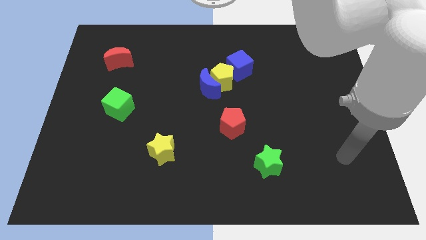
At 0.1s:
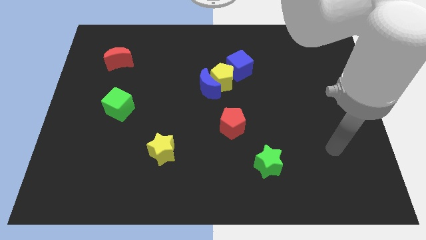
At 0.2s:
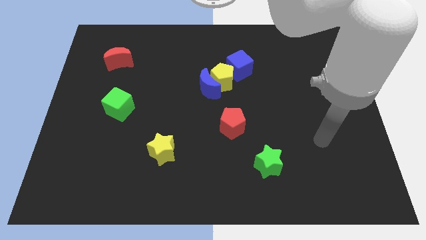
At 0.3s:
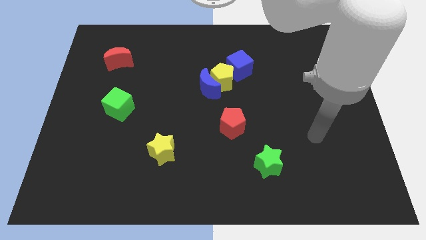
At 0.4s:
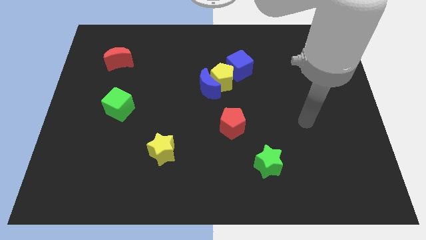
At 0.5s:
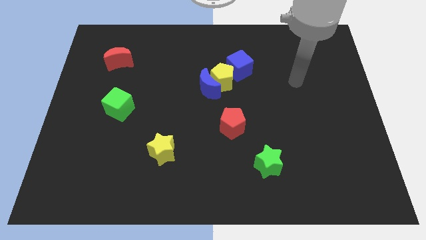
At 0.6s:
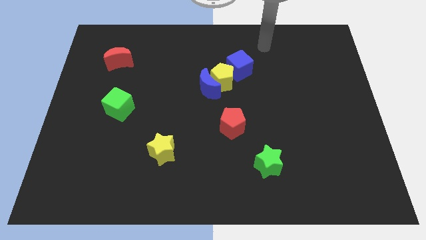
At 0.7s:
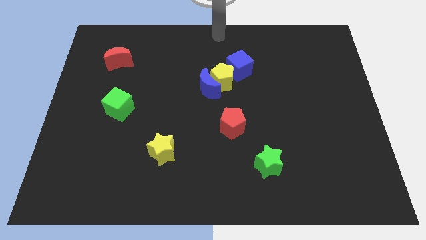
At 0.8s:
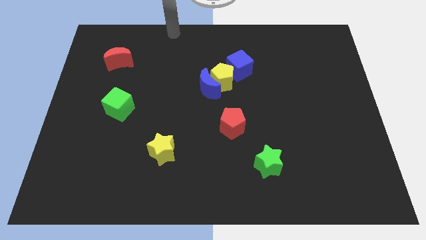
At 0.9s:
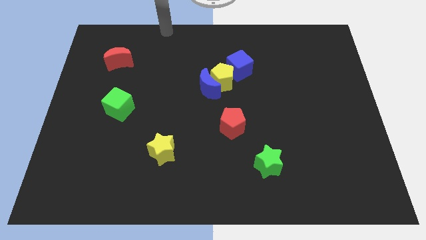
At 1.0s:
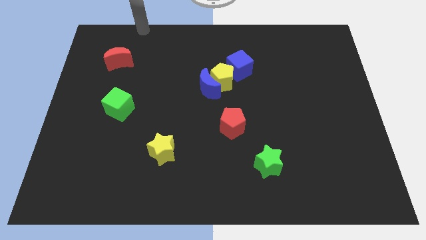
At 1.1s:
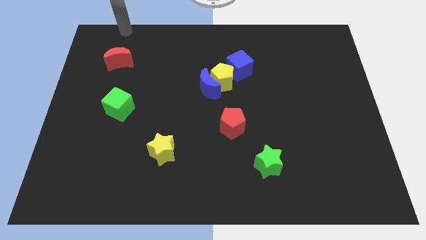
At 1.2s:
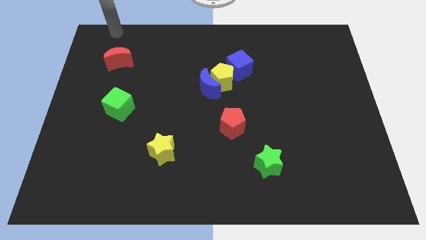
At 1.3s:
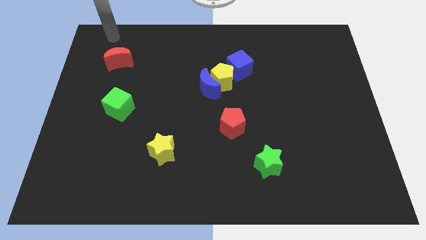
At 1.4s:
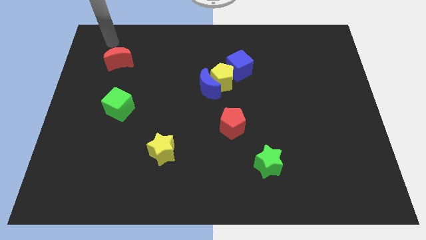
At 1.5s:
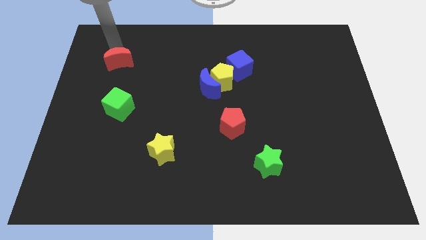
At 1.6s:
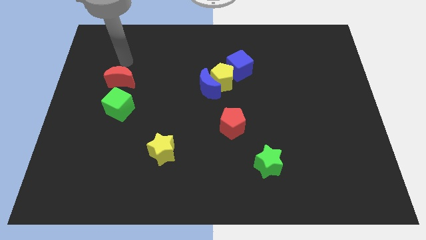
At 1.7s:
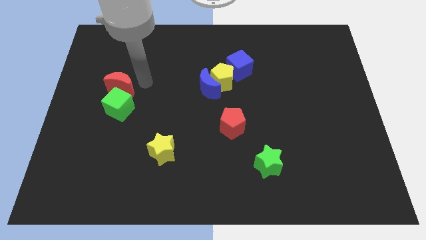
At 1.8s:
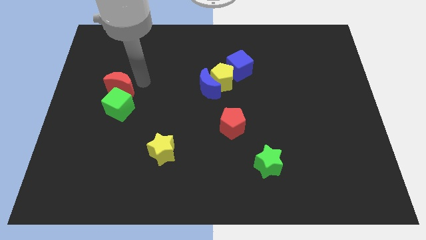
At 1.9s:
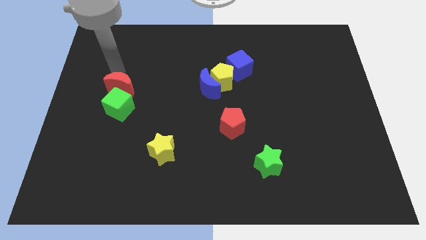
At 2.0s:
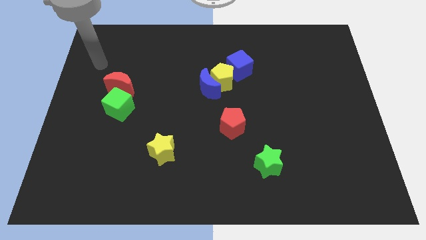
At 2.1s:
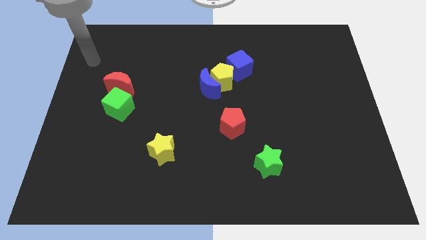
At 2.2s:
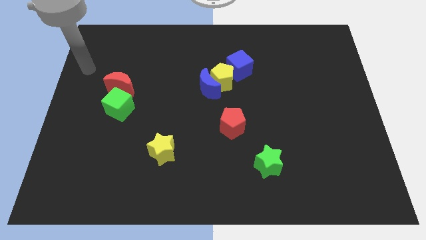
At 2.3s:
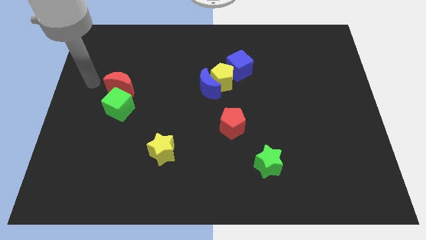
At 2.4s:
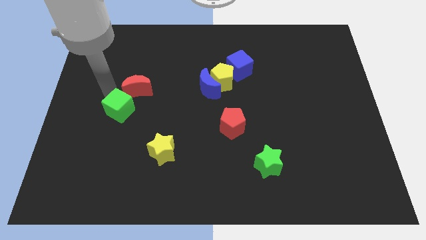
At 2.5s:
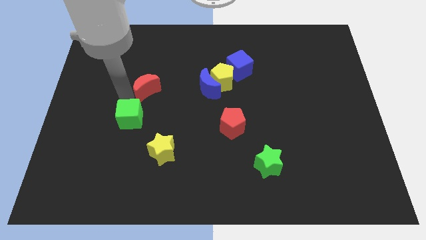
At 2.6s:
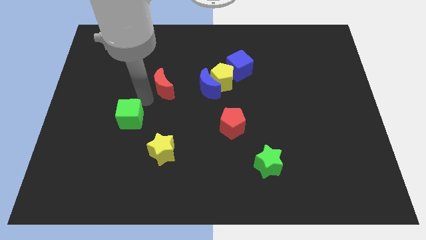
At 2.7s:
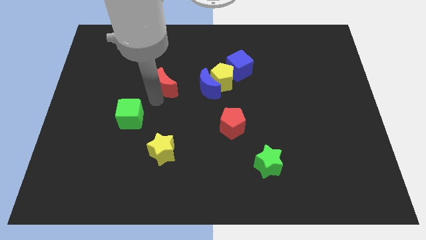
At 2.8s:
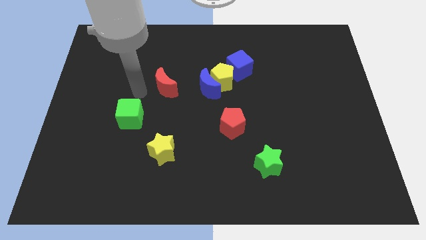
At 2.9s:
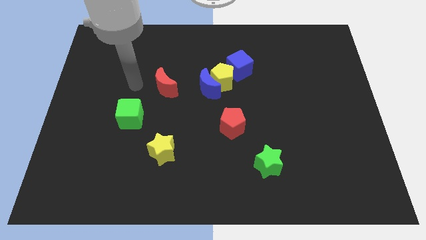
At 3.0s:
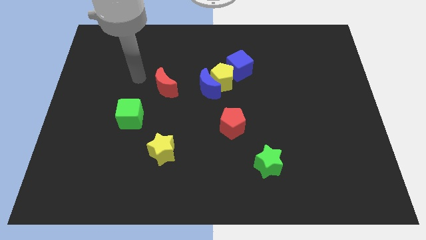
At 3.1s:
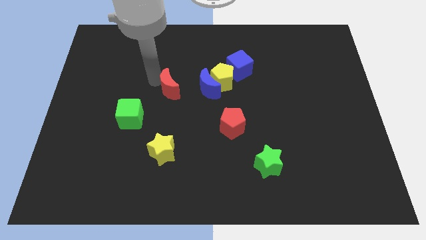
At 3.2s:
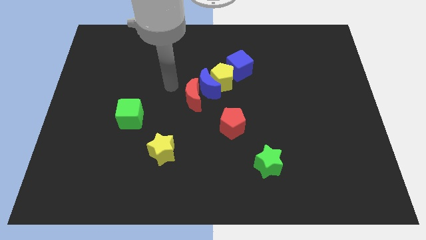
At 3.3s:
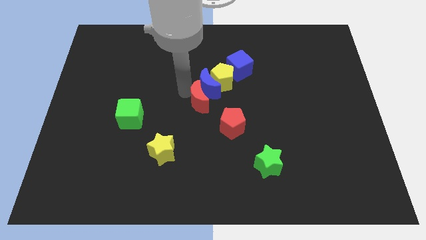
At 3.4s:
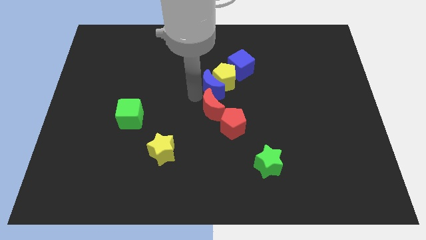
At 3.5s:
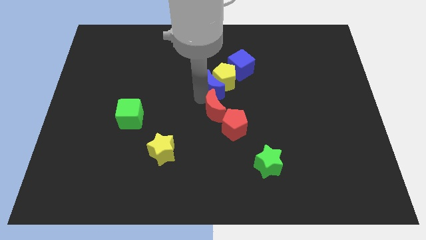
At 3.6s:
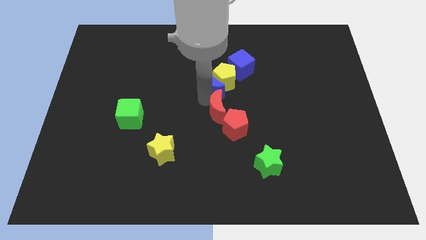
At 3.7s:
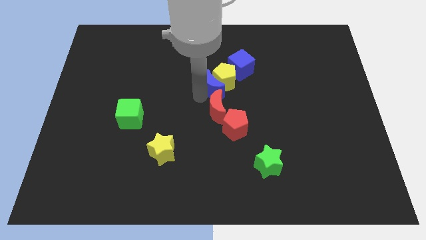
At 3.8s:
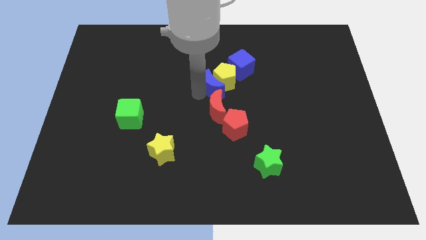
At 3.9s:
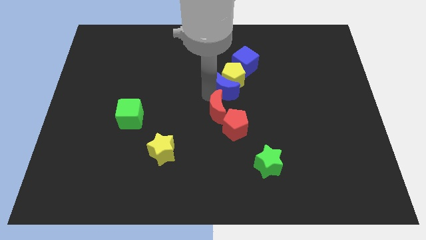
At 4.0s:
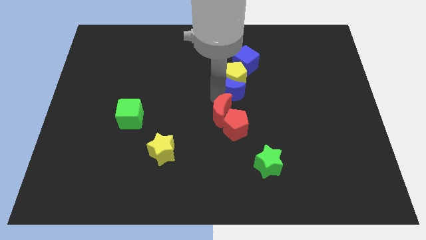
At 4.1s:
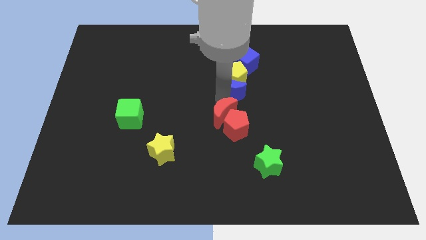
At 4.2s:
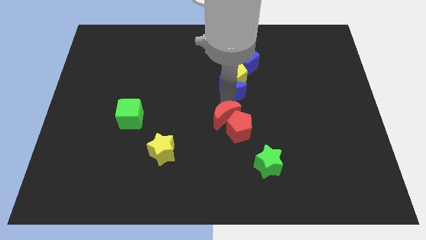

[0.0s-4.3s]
slide the red moon next to the red pentagon

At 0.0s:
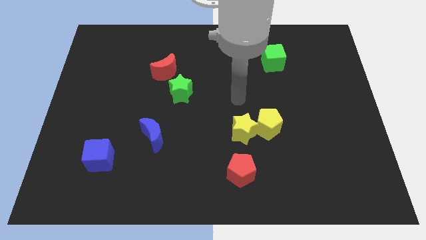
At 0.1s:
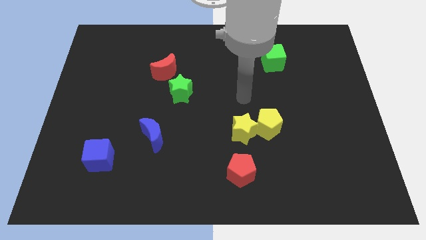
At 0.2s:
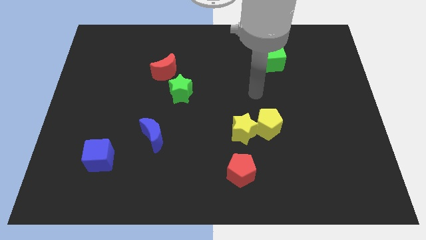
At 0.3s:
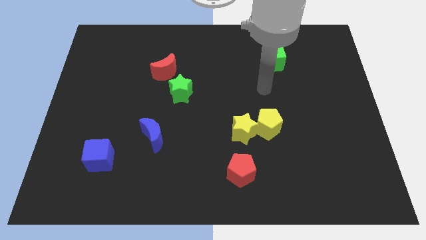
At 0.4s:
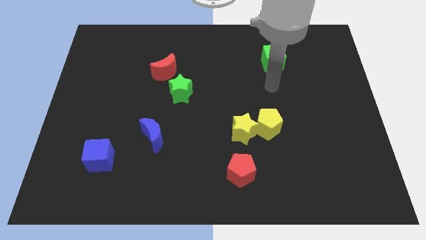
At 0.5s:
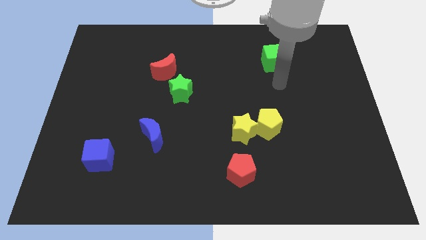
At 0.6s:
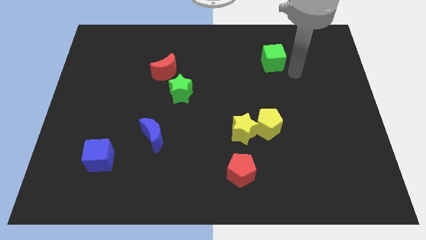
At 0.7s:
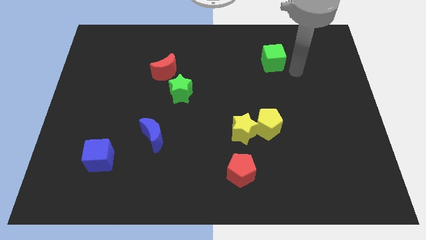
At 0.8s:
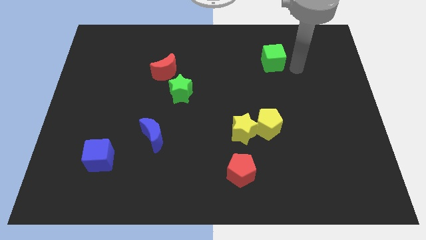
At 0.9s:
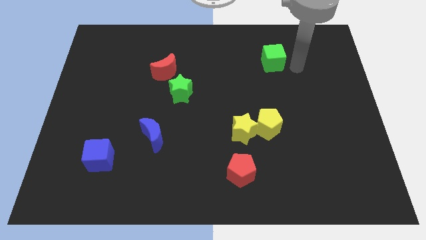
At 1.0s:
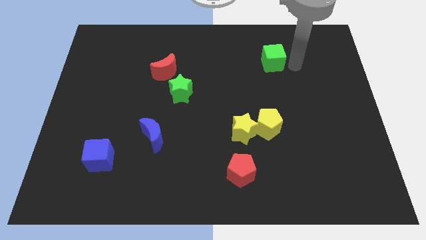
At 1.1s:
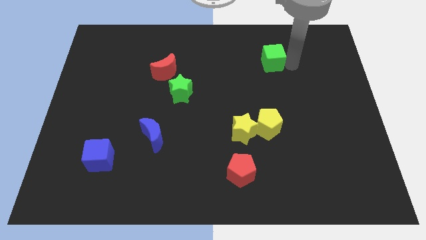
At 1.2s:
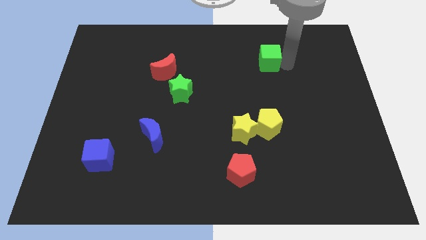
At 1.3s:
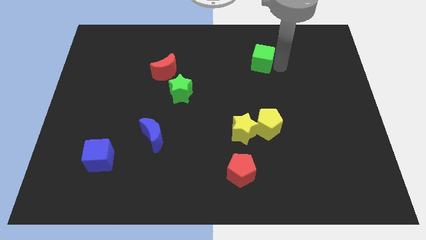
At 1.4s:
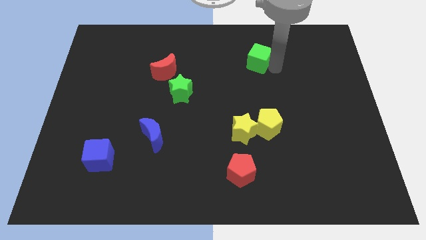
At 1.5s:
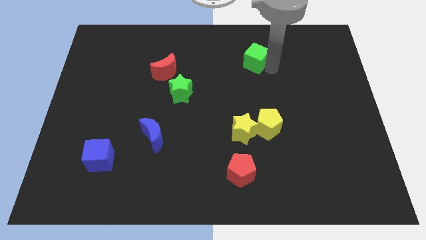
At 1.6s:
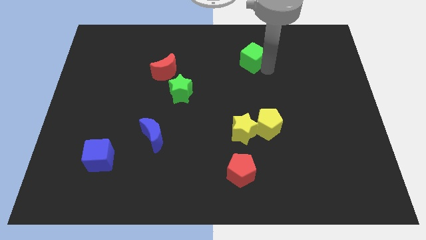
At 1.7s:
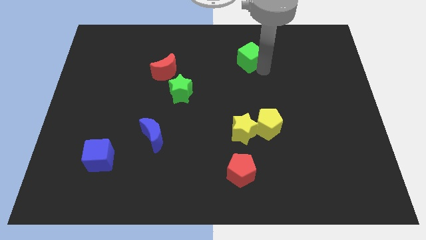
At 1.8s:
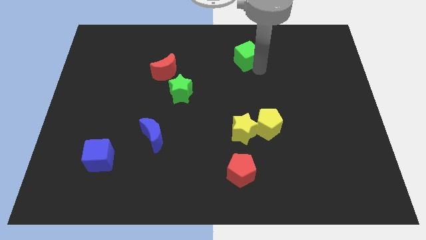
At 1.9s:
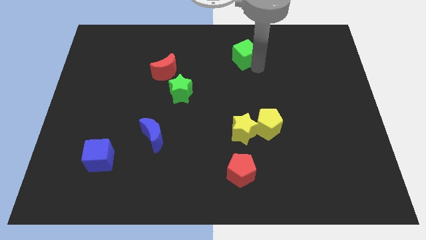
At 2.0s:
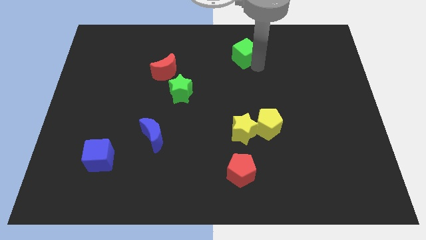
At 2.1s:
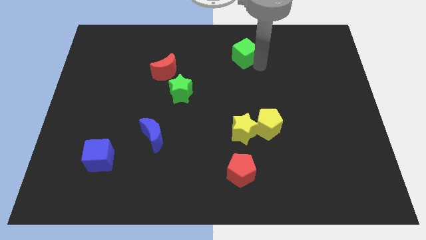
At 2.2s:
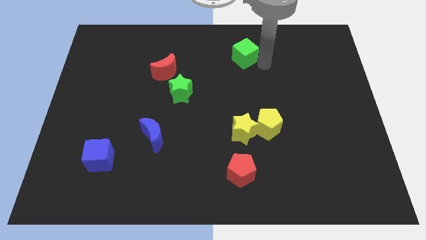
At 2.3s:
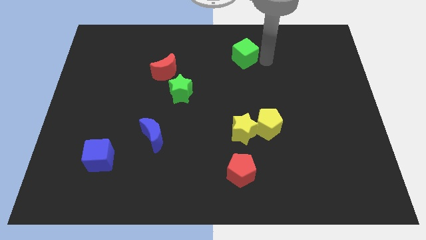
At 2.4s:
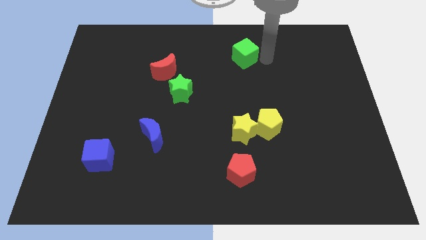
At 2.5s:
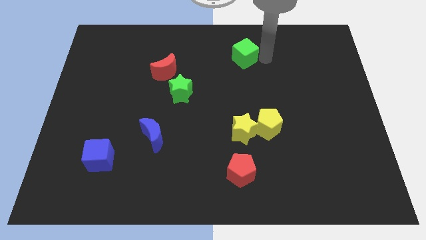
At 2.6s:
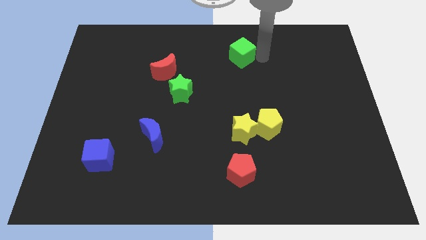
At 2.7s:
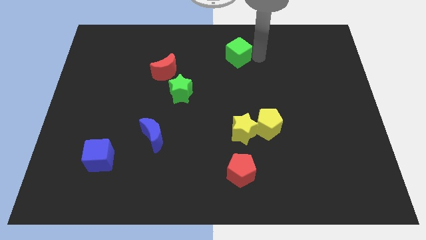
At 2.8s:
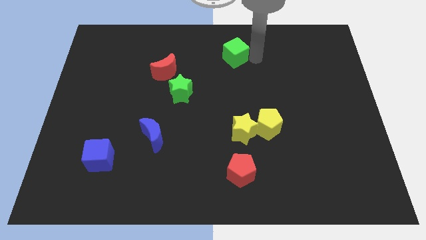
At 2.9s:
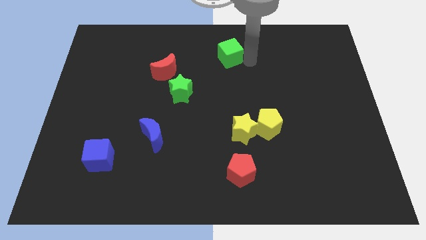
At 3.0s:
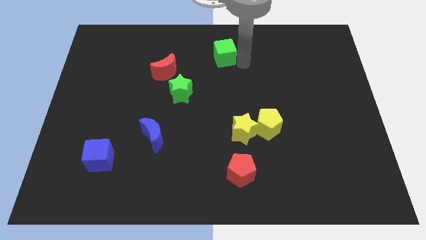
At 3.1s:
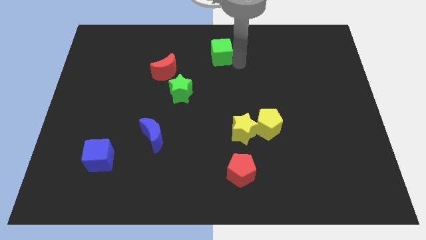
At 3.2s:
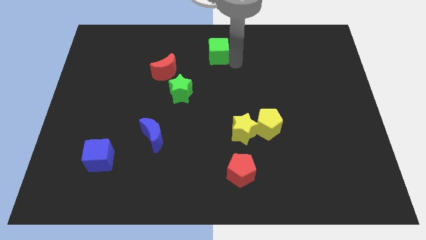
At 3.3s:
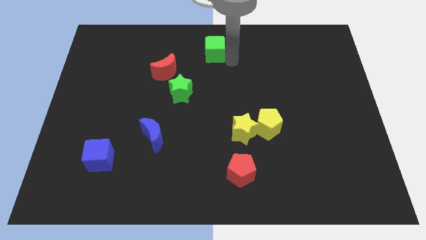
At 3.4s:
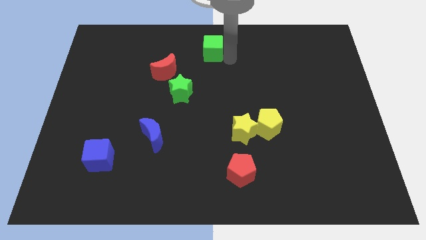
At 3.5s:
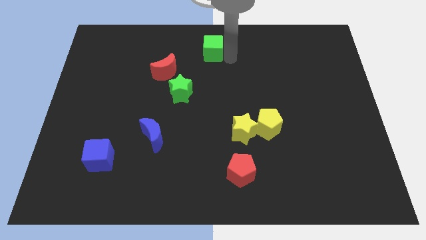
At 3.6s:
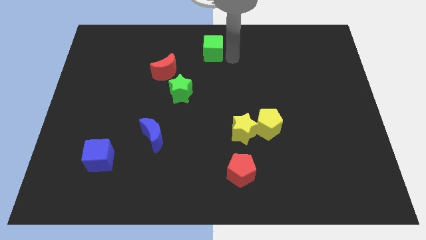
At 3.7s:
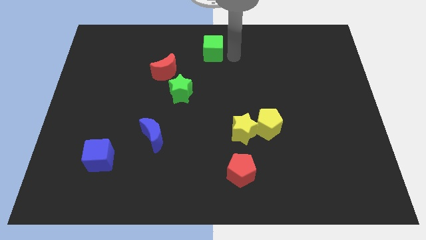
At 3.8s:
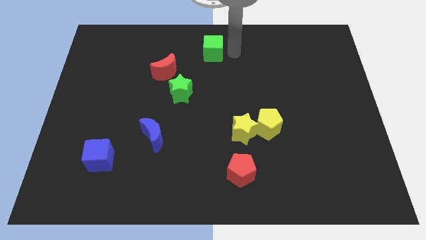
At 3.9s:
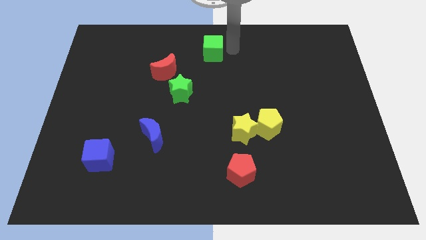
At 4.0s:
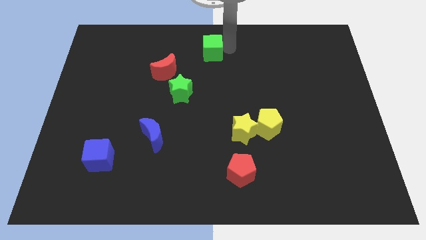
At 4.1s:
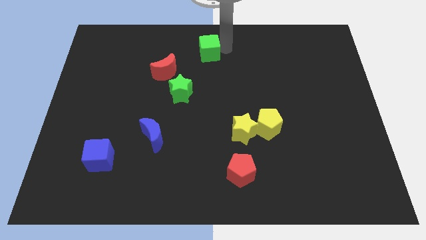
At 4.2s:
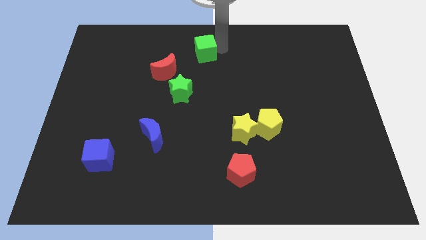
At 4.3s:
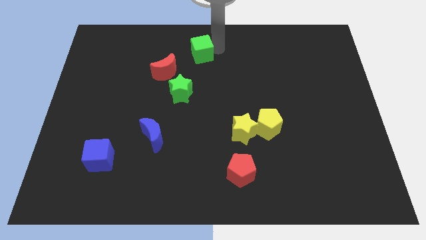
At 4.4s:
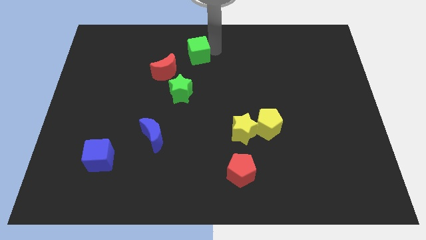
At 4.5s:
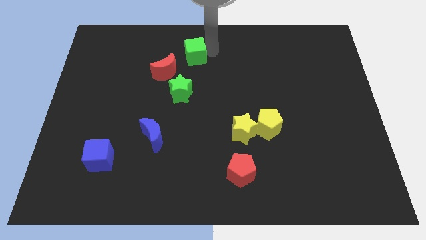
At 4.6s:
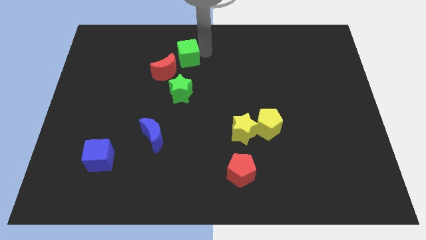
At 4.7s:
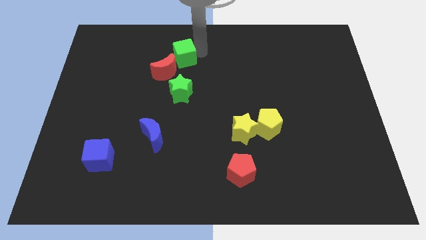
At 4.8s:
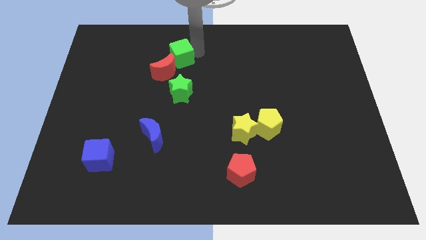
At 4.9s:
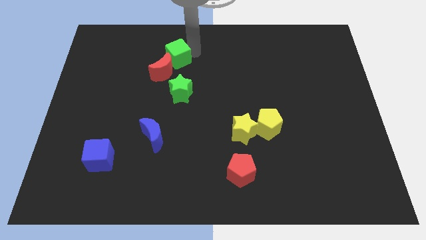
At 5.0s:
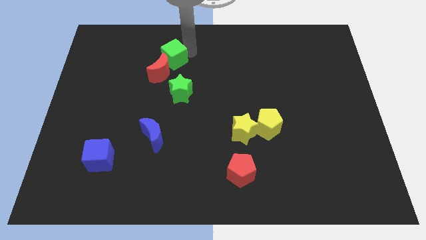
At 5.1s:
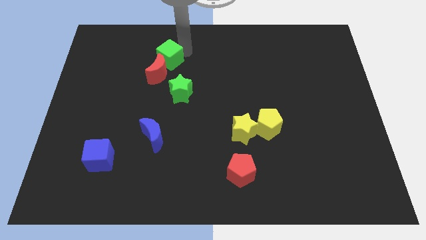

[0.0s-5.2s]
put the green cube to the red moon
